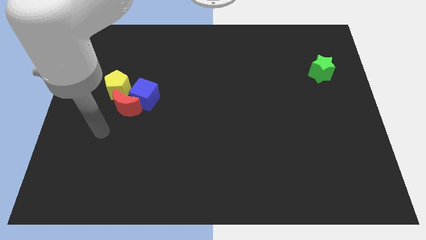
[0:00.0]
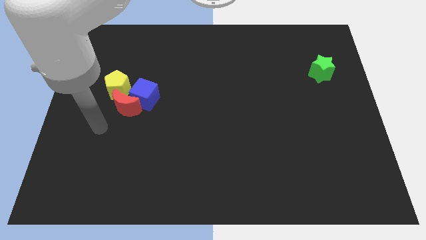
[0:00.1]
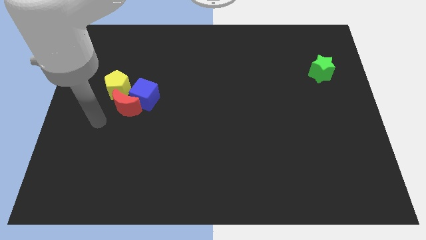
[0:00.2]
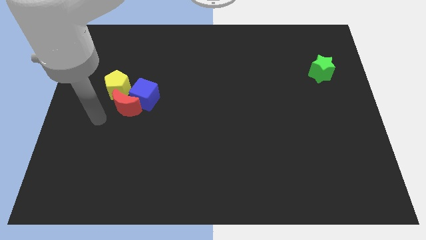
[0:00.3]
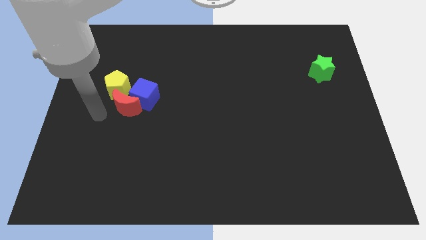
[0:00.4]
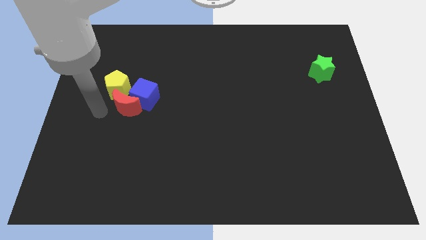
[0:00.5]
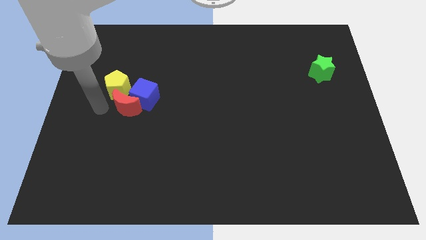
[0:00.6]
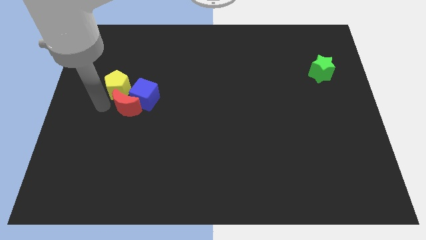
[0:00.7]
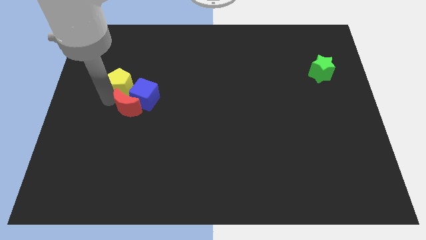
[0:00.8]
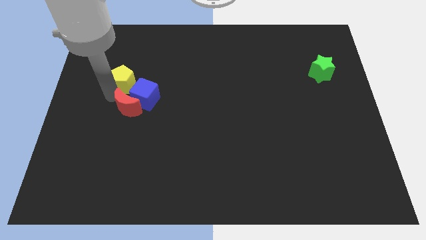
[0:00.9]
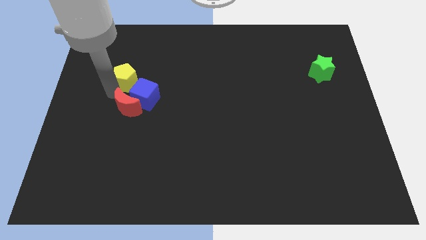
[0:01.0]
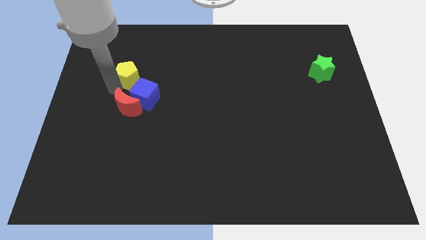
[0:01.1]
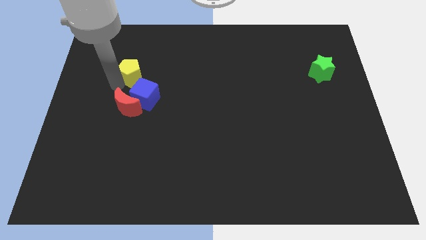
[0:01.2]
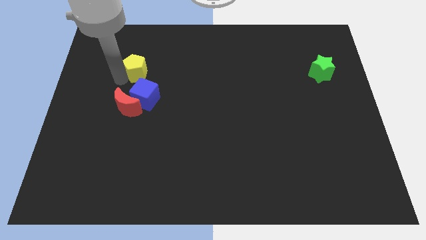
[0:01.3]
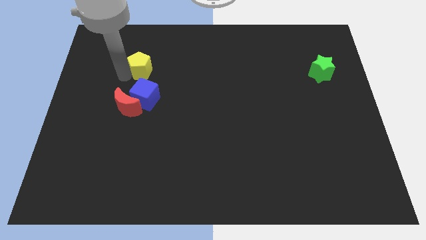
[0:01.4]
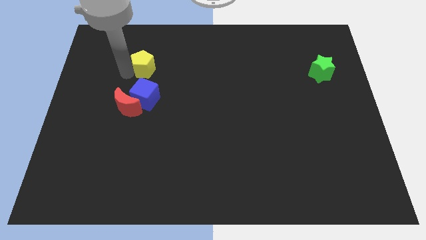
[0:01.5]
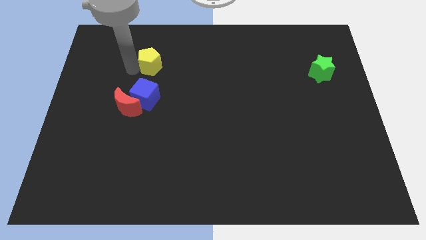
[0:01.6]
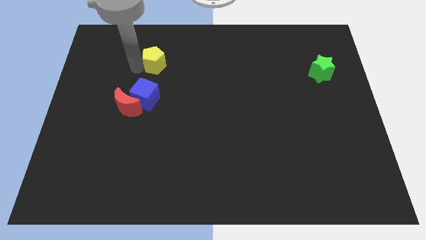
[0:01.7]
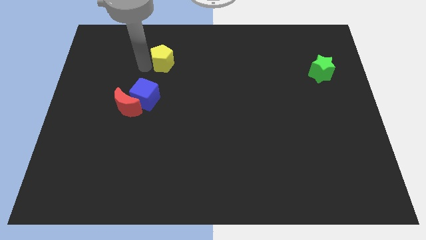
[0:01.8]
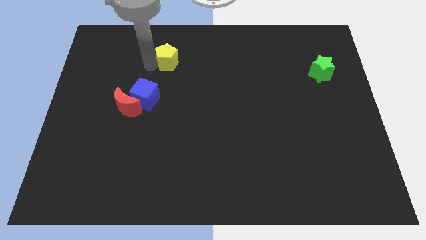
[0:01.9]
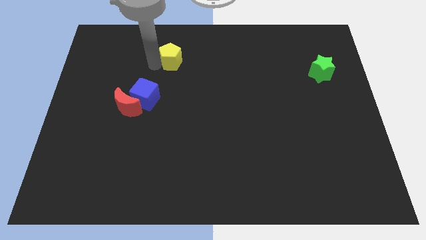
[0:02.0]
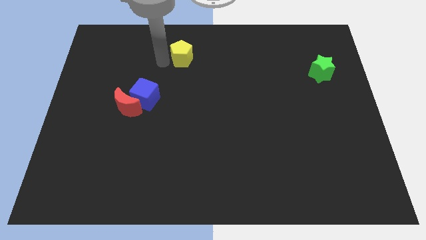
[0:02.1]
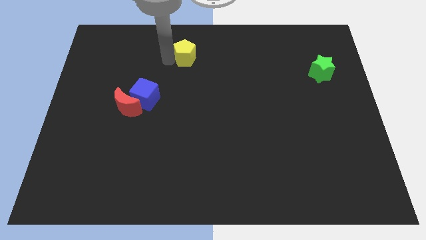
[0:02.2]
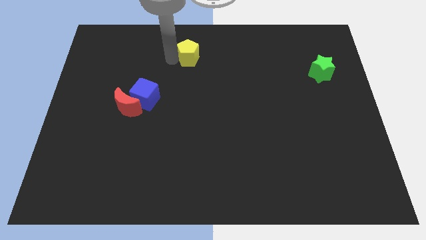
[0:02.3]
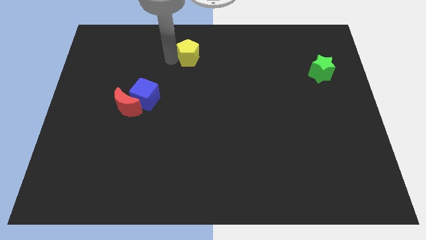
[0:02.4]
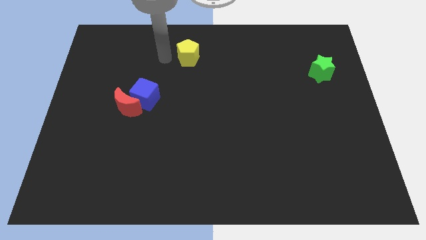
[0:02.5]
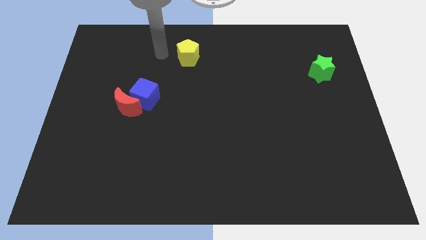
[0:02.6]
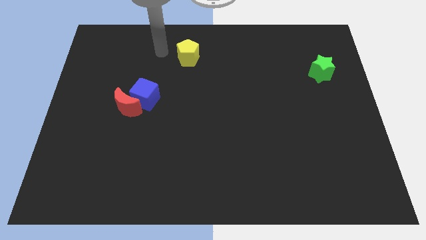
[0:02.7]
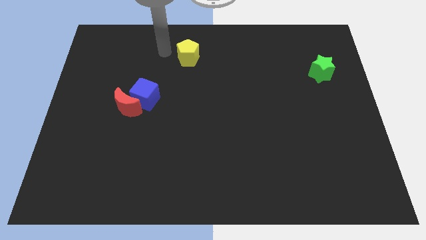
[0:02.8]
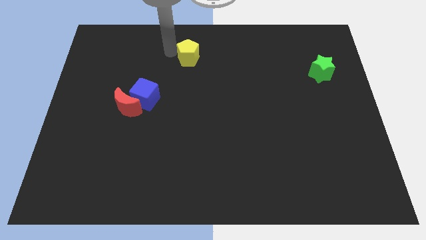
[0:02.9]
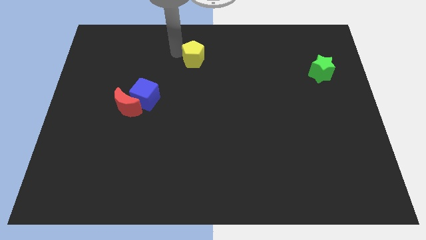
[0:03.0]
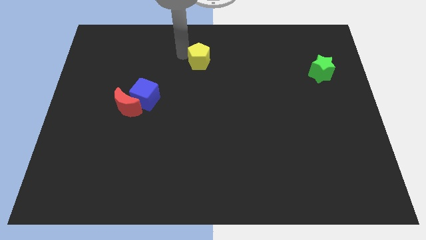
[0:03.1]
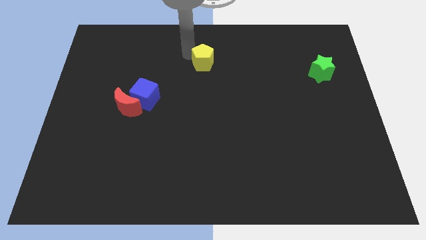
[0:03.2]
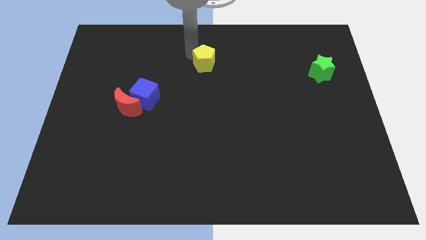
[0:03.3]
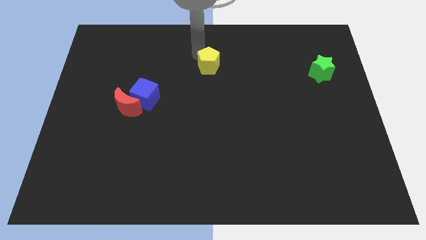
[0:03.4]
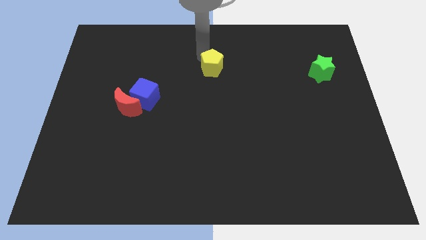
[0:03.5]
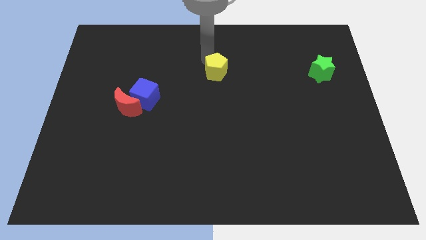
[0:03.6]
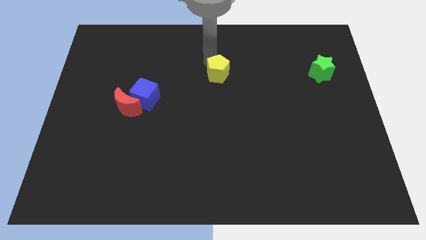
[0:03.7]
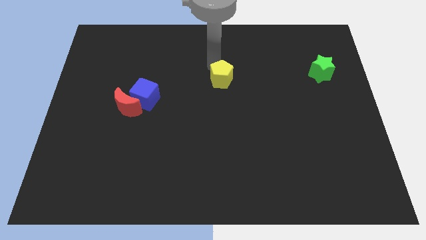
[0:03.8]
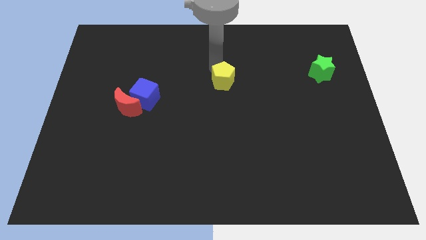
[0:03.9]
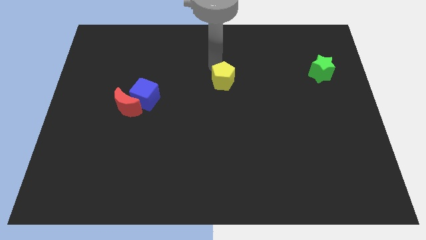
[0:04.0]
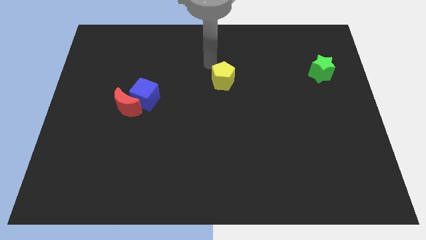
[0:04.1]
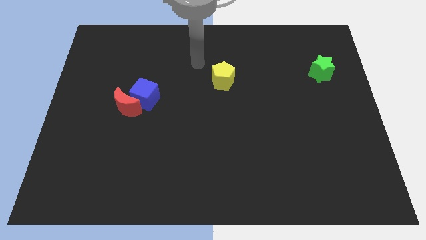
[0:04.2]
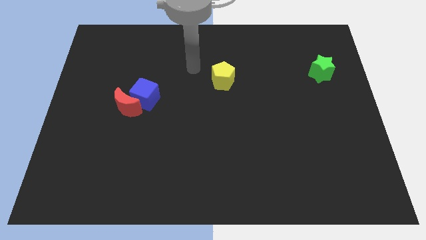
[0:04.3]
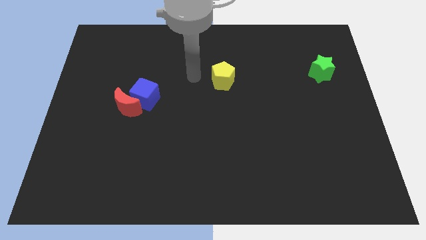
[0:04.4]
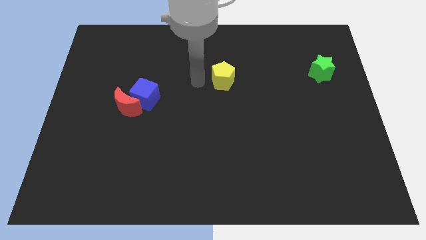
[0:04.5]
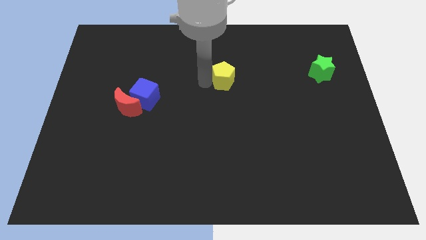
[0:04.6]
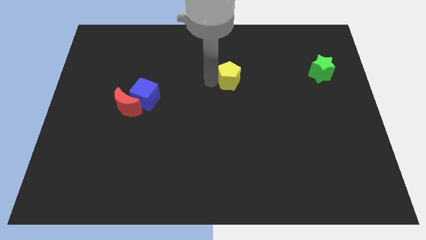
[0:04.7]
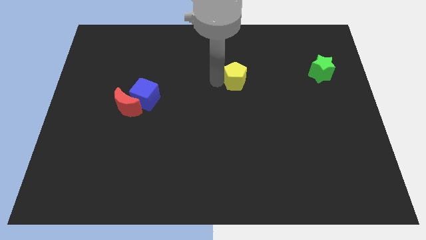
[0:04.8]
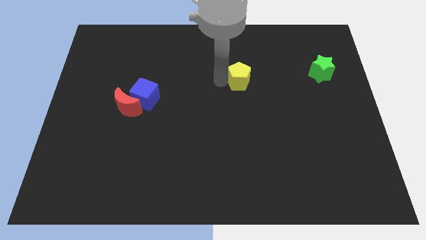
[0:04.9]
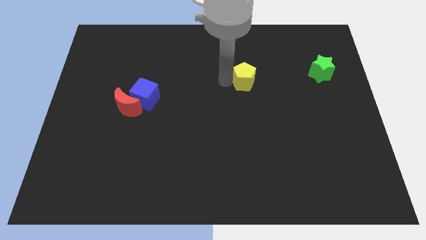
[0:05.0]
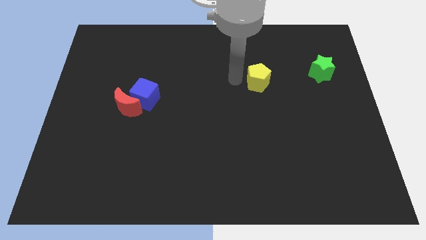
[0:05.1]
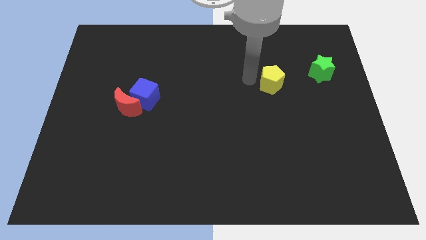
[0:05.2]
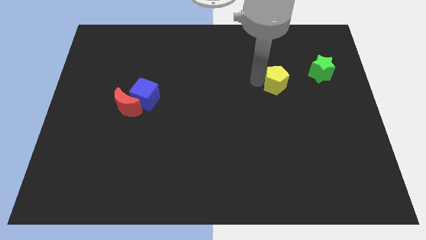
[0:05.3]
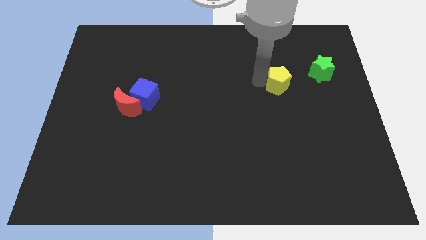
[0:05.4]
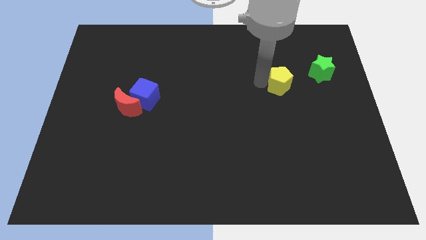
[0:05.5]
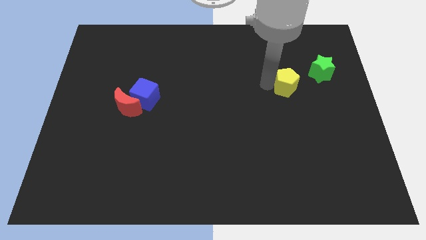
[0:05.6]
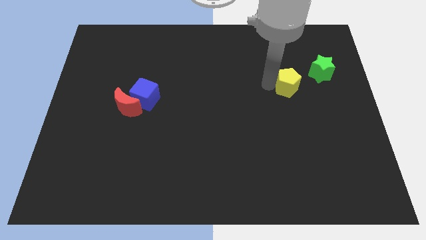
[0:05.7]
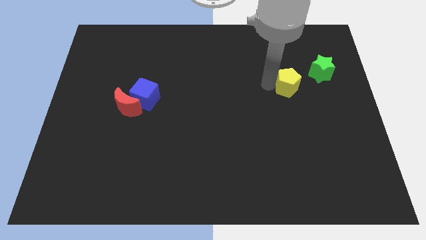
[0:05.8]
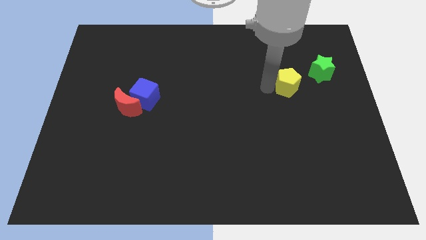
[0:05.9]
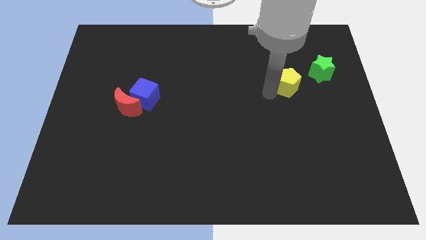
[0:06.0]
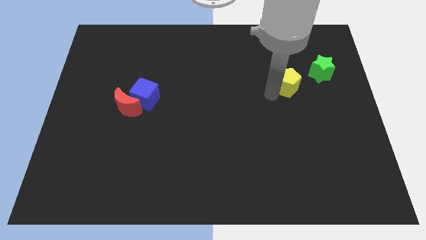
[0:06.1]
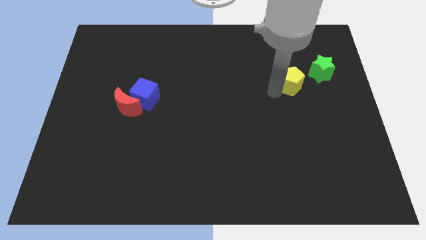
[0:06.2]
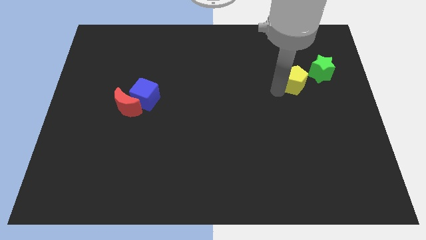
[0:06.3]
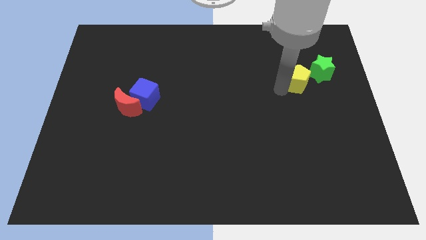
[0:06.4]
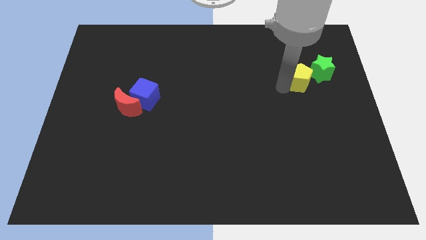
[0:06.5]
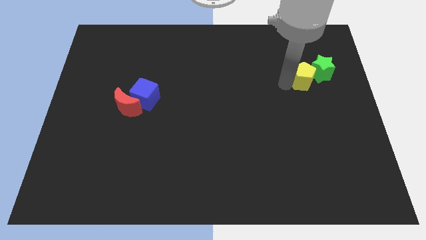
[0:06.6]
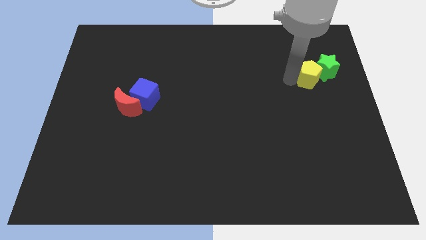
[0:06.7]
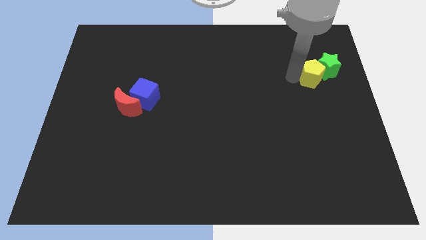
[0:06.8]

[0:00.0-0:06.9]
push the yellow block close to the green star

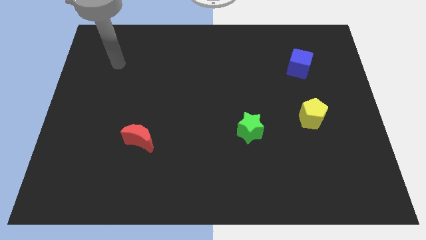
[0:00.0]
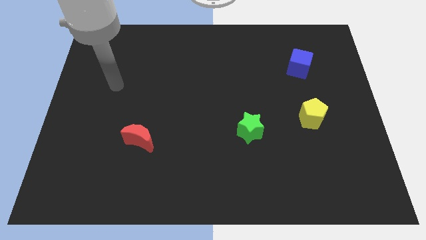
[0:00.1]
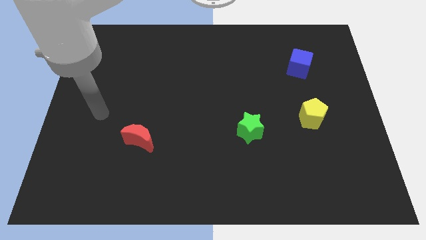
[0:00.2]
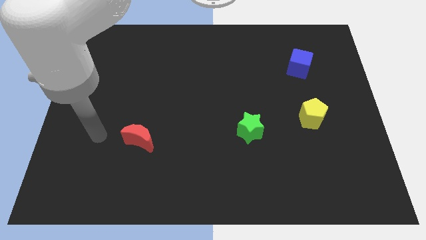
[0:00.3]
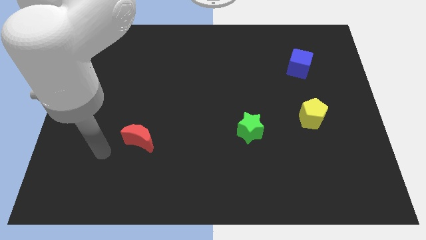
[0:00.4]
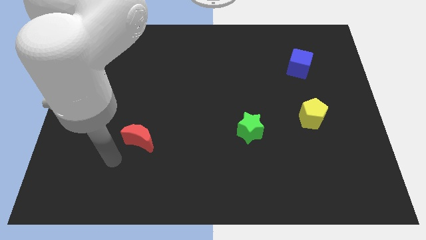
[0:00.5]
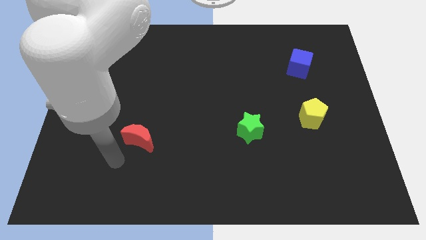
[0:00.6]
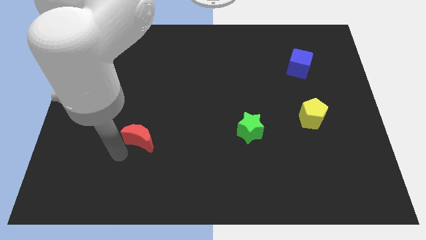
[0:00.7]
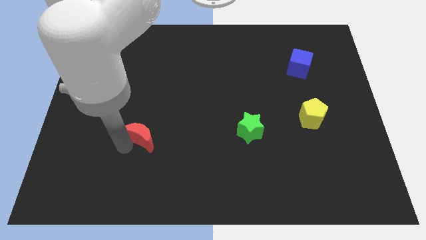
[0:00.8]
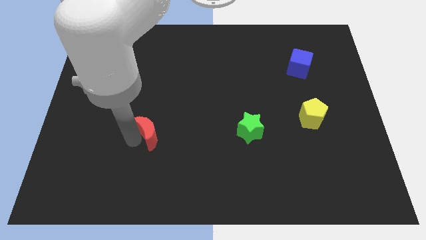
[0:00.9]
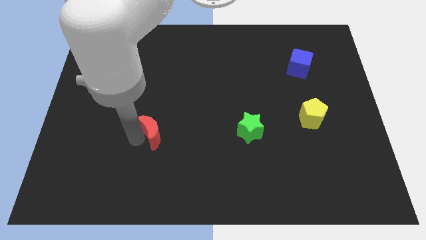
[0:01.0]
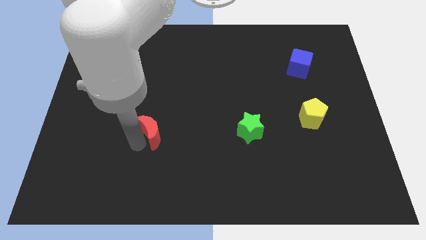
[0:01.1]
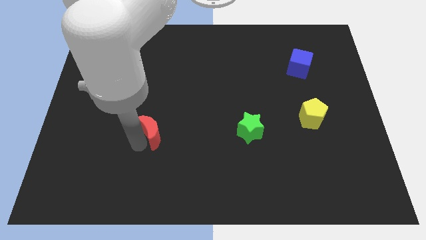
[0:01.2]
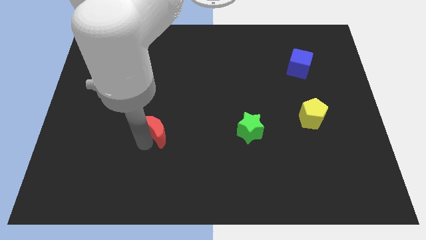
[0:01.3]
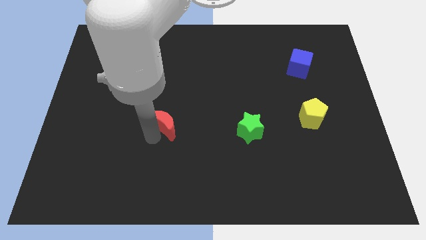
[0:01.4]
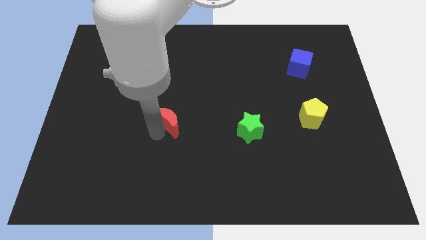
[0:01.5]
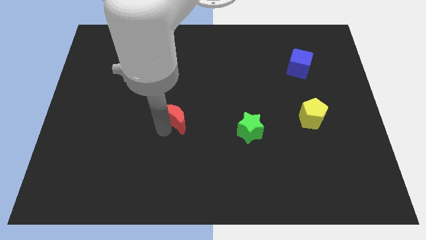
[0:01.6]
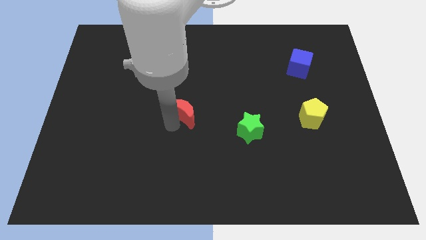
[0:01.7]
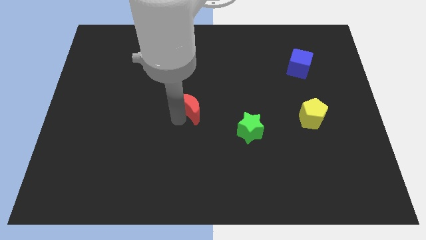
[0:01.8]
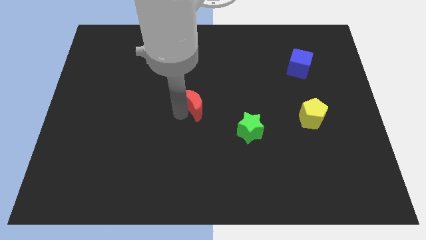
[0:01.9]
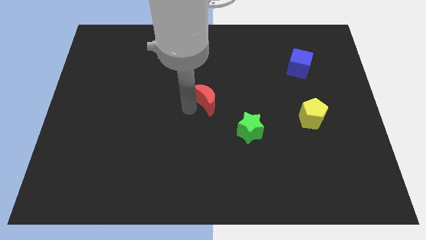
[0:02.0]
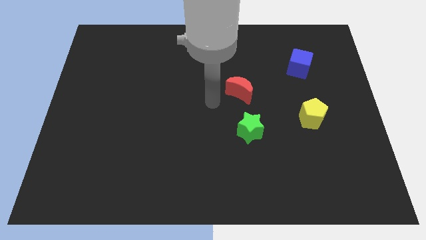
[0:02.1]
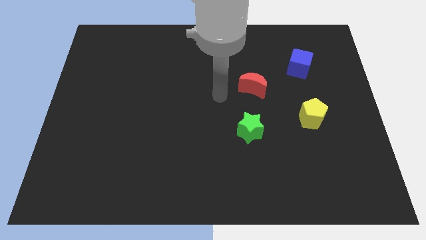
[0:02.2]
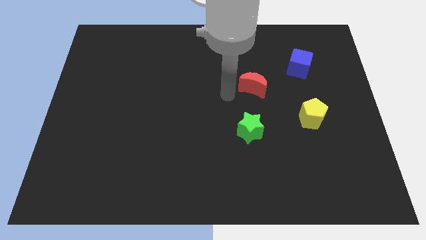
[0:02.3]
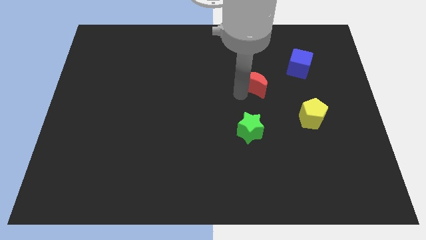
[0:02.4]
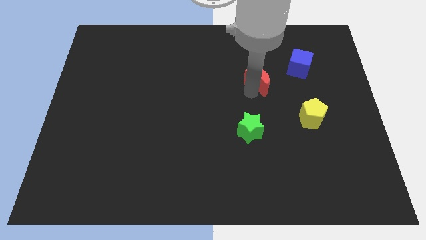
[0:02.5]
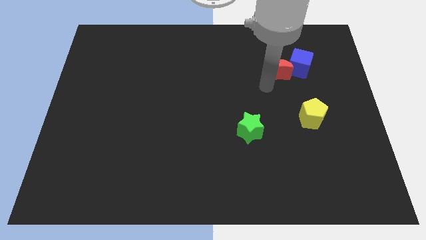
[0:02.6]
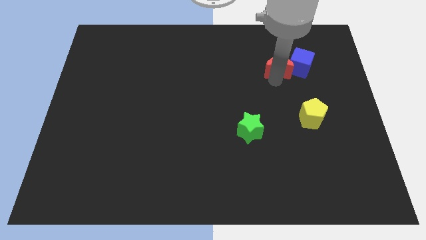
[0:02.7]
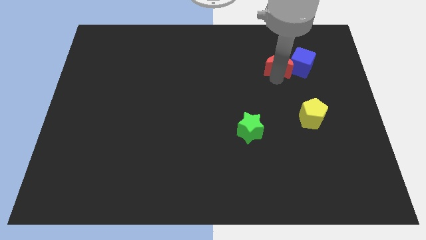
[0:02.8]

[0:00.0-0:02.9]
slide the red block to the blue cube
